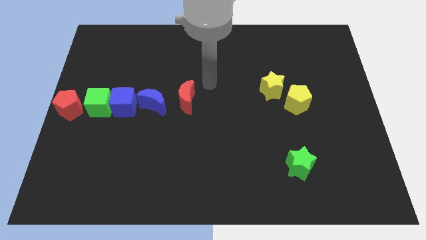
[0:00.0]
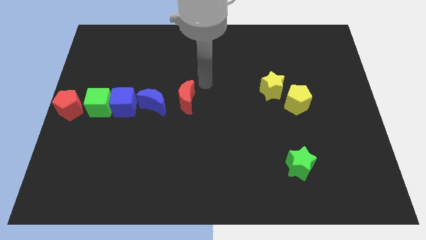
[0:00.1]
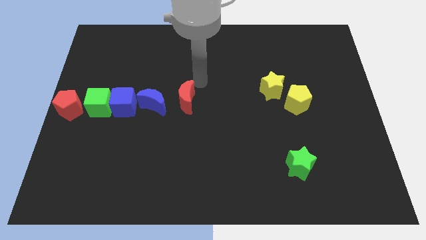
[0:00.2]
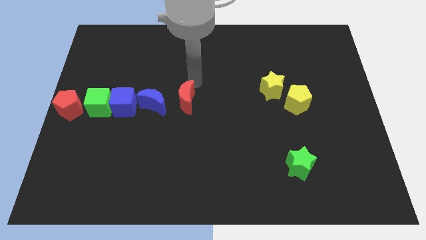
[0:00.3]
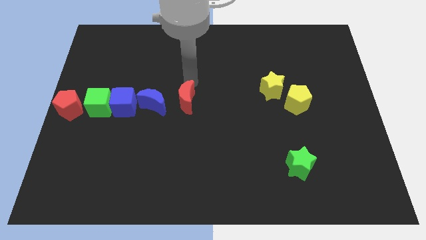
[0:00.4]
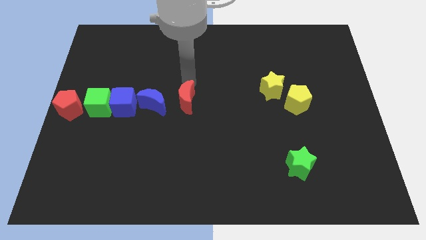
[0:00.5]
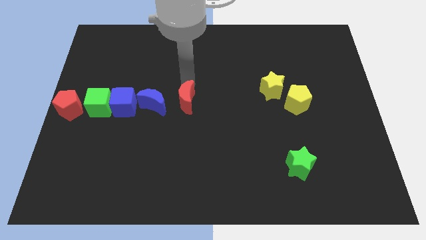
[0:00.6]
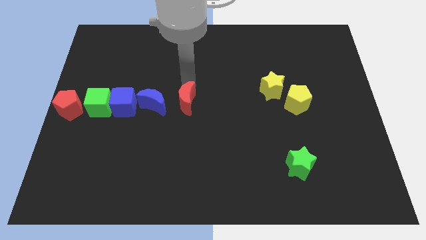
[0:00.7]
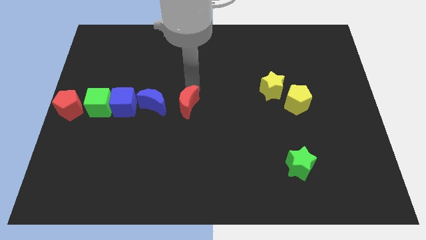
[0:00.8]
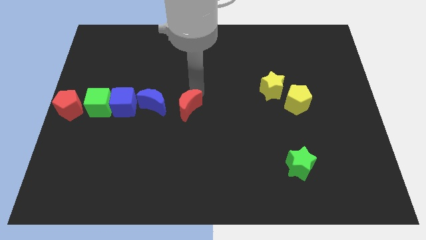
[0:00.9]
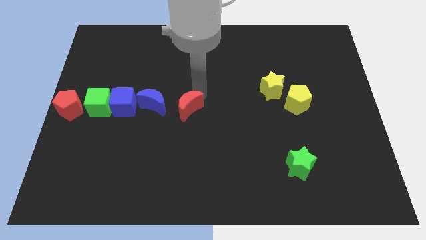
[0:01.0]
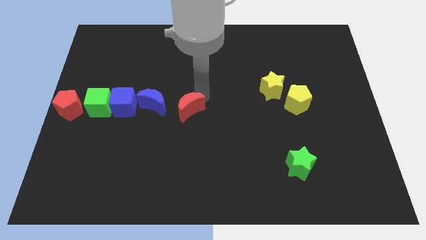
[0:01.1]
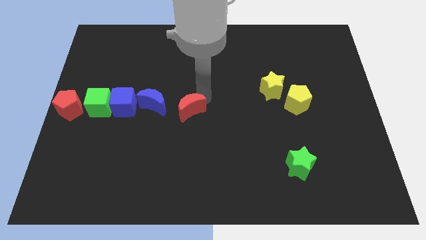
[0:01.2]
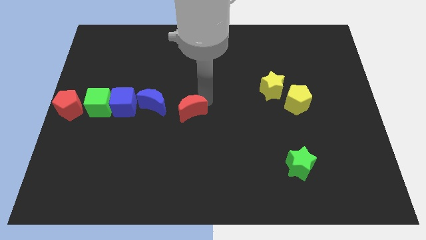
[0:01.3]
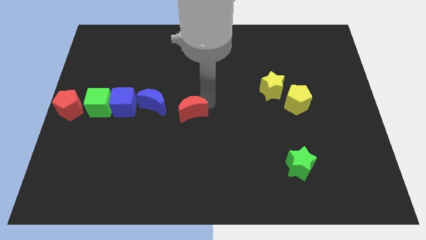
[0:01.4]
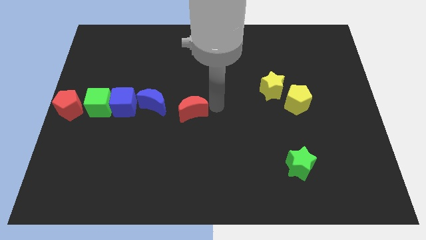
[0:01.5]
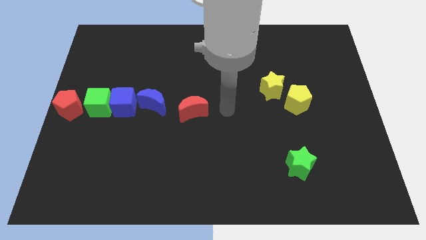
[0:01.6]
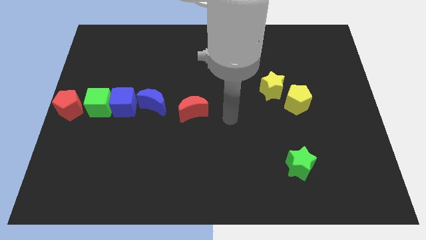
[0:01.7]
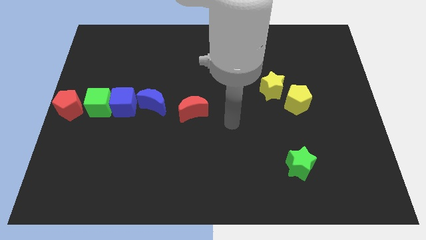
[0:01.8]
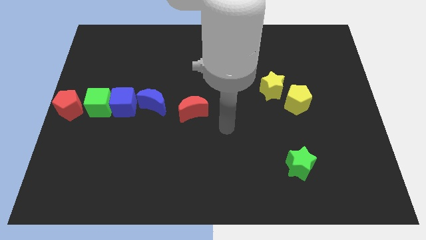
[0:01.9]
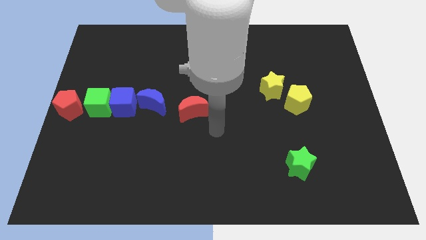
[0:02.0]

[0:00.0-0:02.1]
place red moon at the center

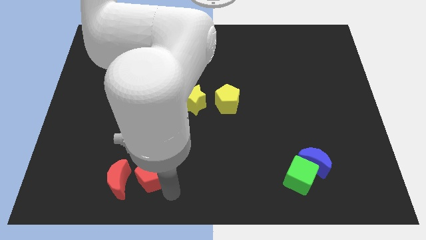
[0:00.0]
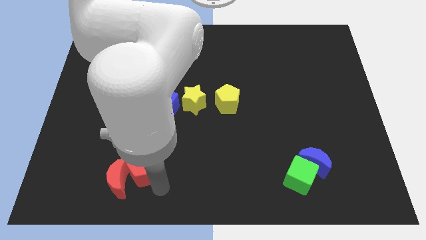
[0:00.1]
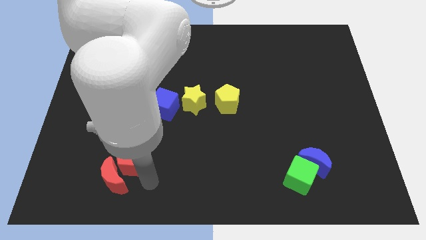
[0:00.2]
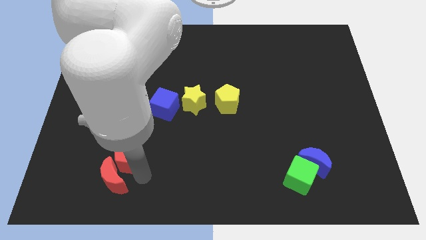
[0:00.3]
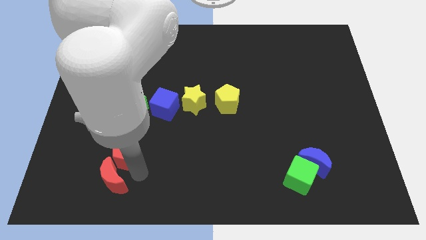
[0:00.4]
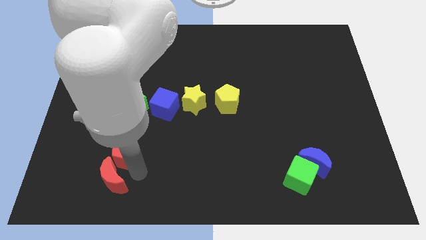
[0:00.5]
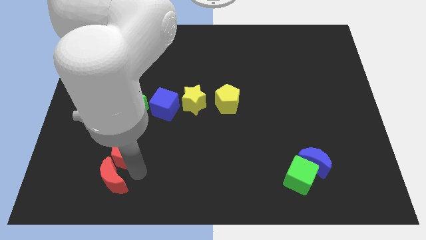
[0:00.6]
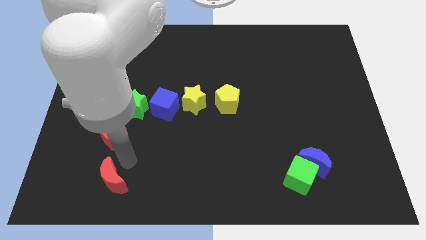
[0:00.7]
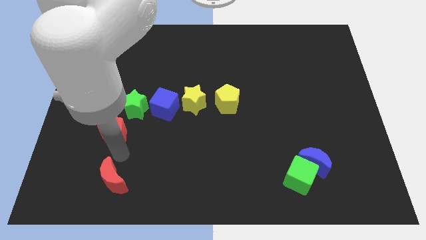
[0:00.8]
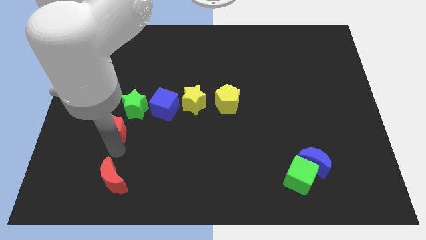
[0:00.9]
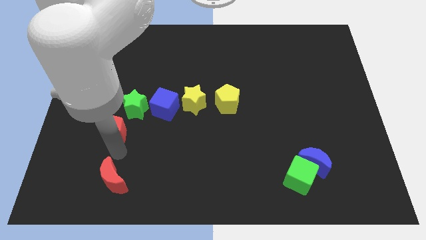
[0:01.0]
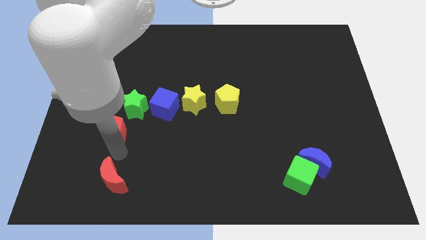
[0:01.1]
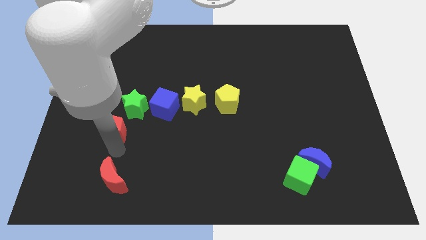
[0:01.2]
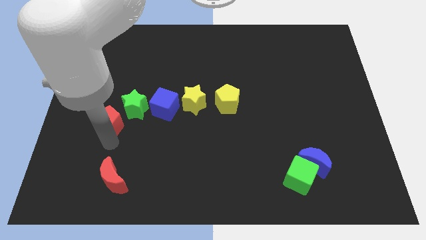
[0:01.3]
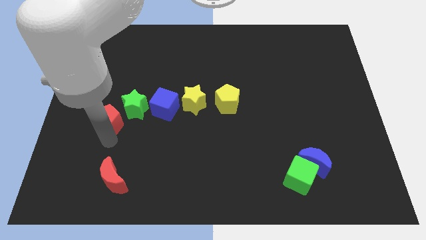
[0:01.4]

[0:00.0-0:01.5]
separate the red blocks

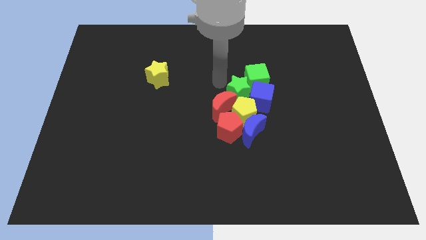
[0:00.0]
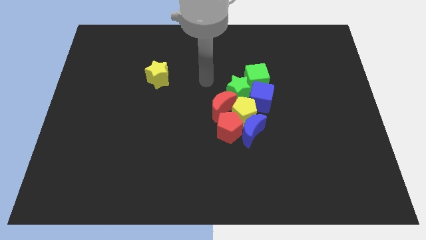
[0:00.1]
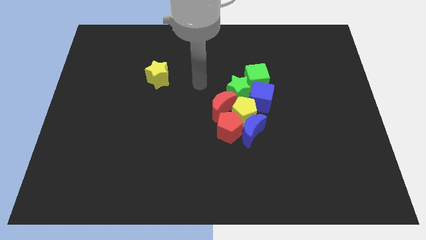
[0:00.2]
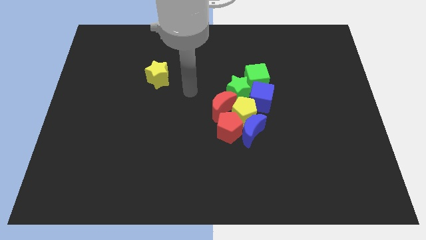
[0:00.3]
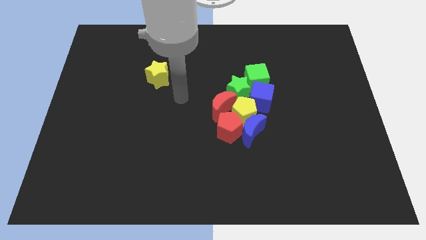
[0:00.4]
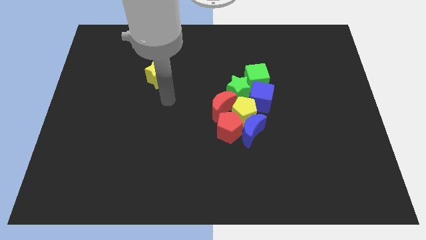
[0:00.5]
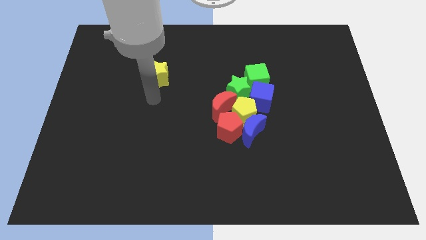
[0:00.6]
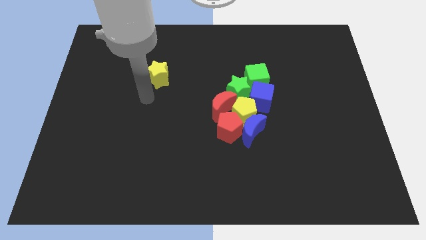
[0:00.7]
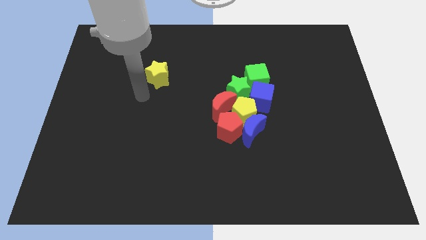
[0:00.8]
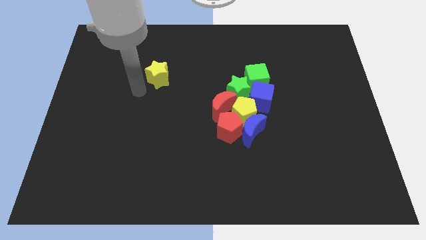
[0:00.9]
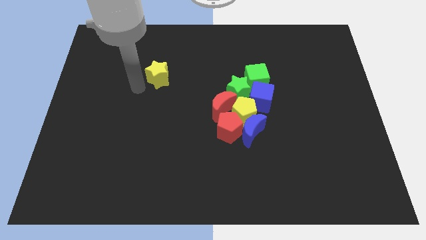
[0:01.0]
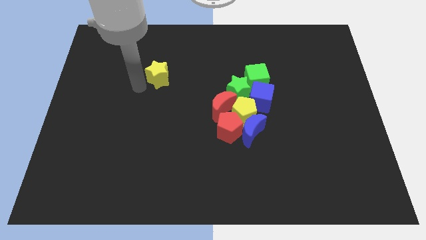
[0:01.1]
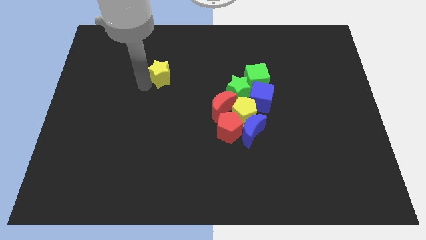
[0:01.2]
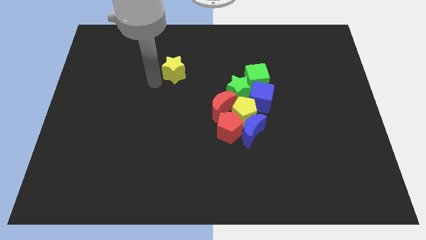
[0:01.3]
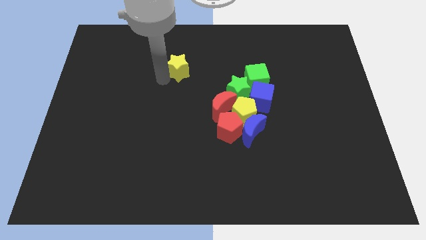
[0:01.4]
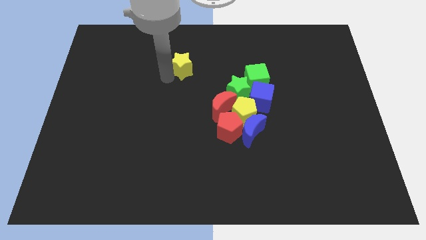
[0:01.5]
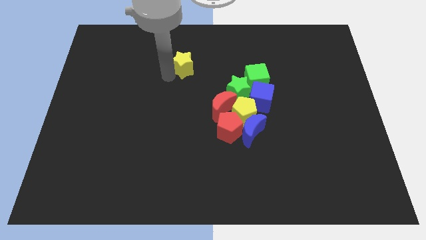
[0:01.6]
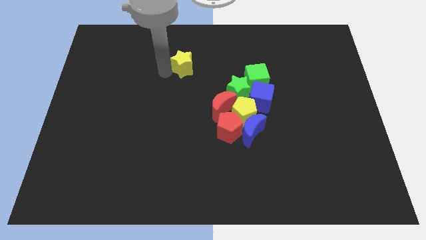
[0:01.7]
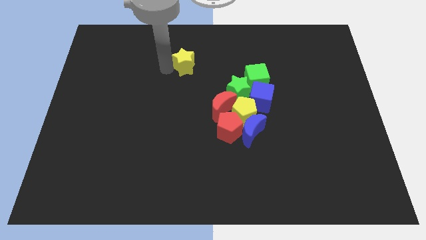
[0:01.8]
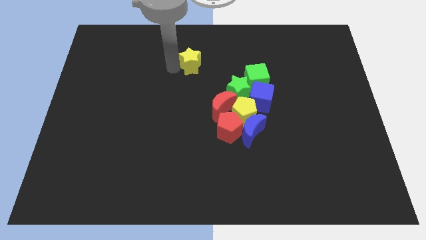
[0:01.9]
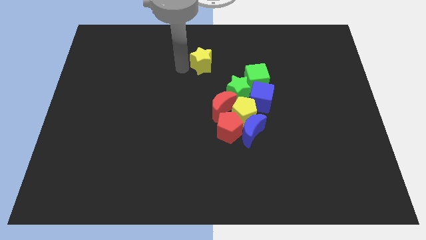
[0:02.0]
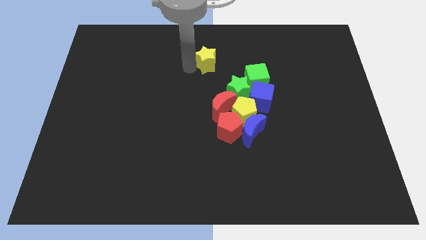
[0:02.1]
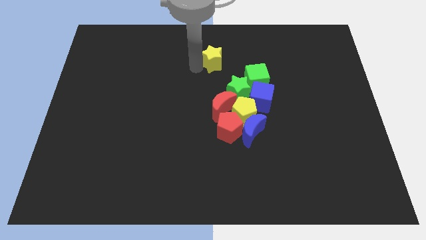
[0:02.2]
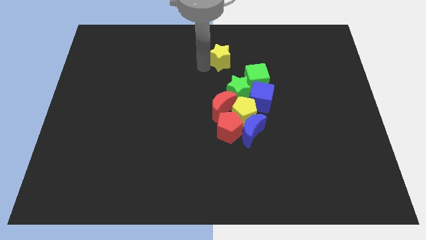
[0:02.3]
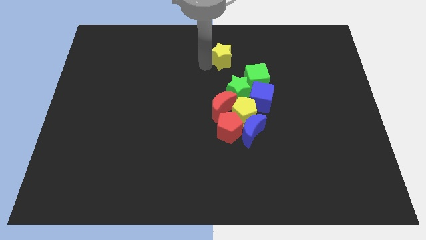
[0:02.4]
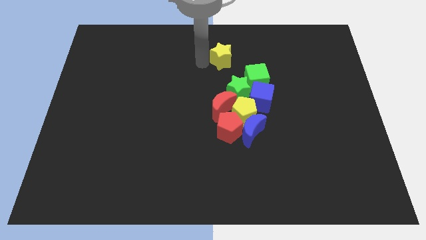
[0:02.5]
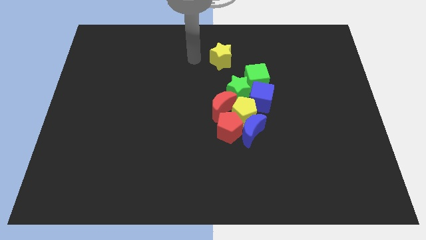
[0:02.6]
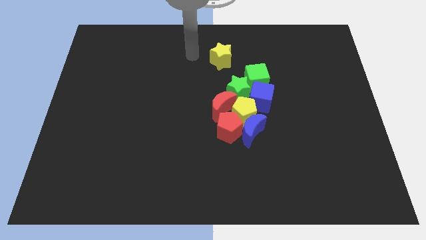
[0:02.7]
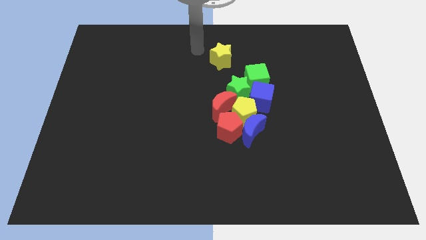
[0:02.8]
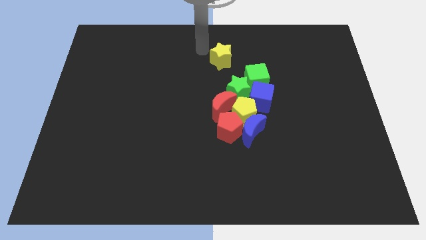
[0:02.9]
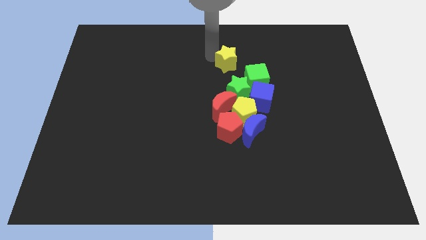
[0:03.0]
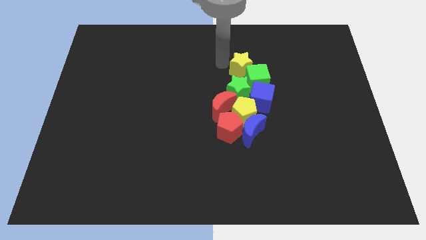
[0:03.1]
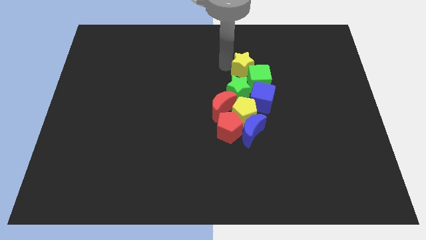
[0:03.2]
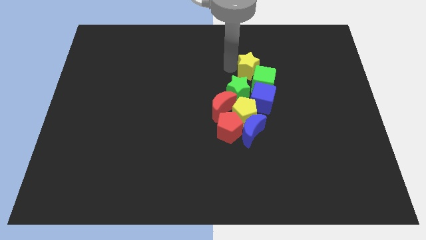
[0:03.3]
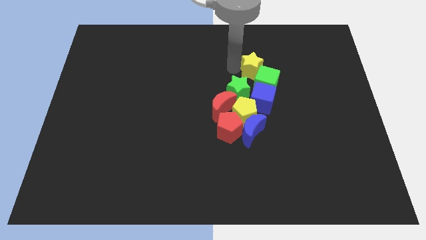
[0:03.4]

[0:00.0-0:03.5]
move the yellow star into the green cube

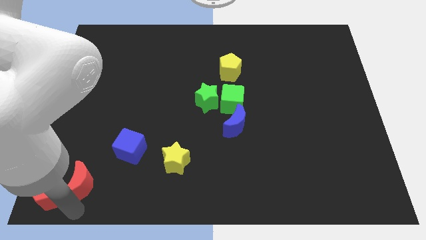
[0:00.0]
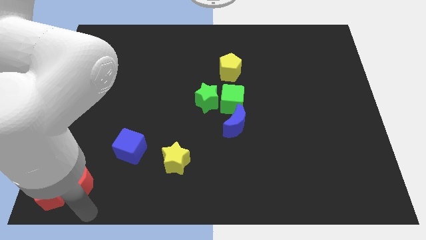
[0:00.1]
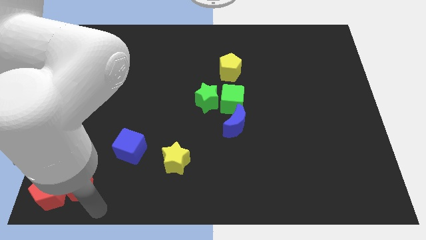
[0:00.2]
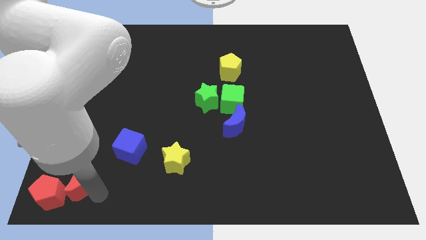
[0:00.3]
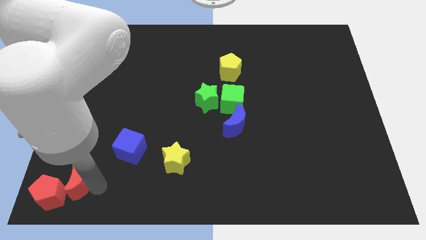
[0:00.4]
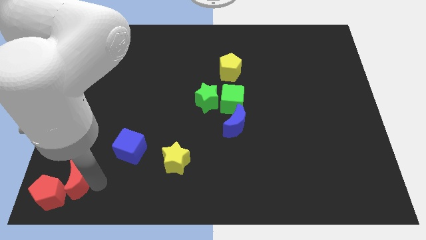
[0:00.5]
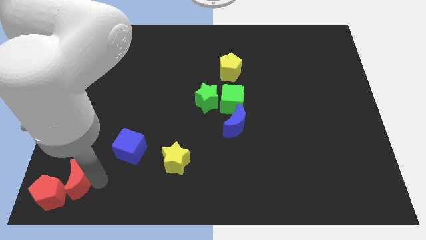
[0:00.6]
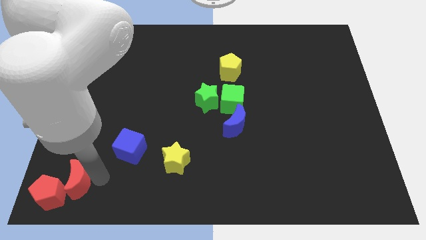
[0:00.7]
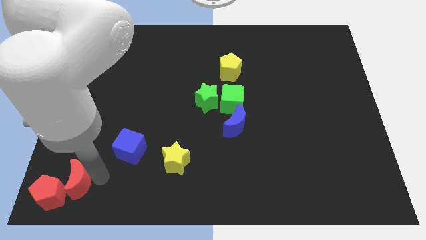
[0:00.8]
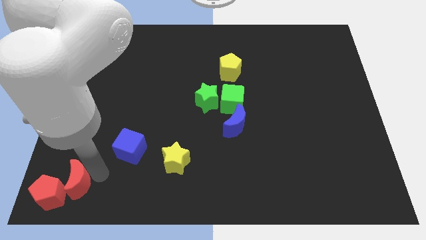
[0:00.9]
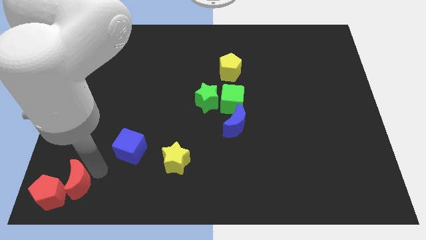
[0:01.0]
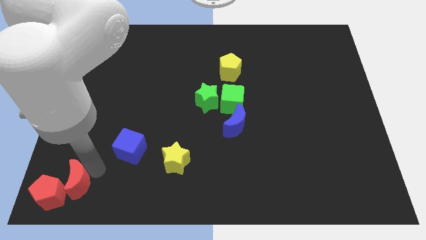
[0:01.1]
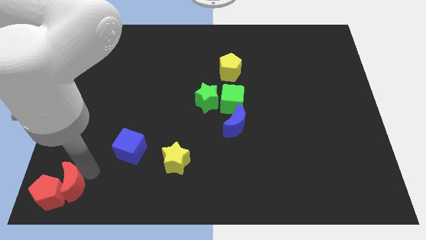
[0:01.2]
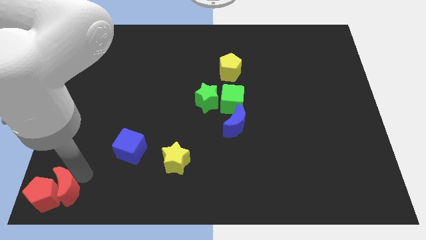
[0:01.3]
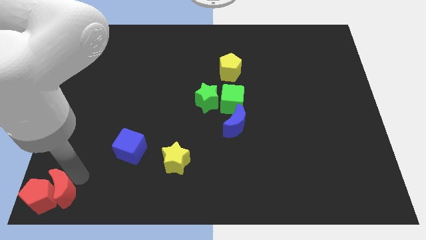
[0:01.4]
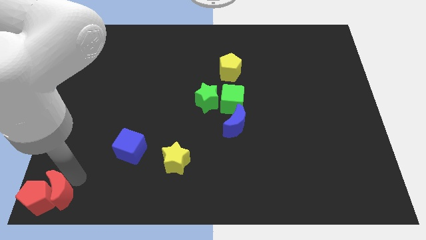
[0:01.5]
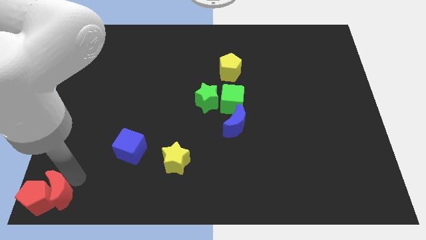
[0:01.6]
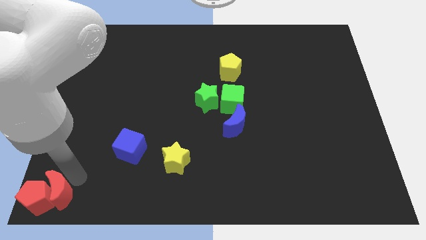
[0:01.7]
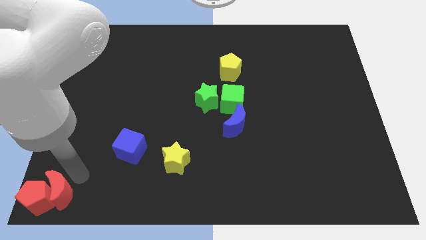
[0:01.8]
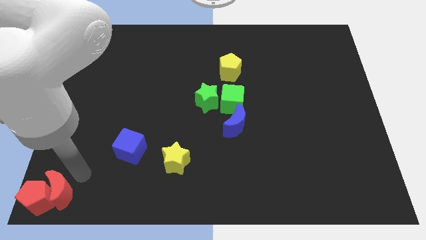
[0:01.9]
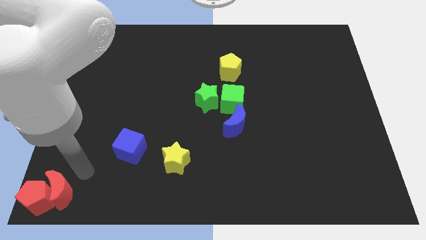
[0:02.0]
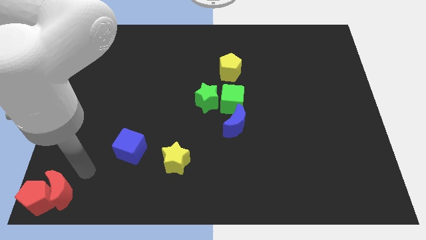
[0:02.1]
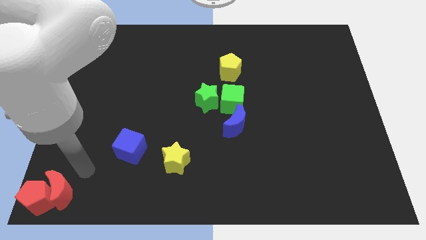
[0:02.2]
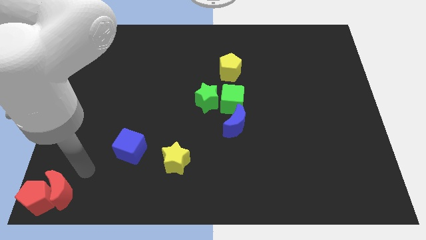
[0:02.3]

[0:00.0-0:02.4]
move the red pentagon with red moon to the bottom left of the board
